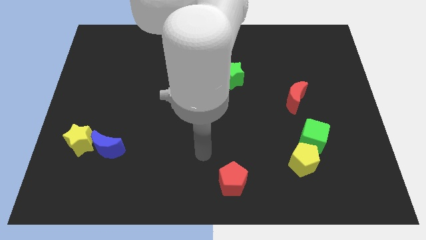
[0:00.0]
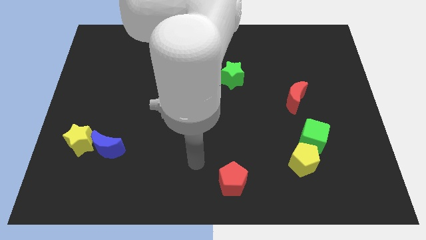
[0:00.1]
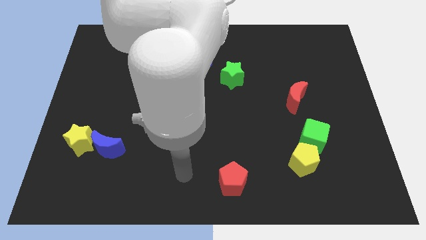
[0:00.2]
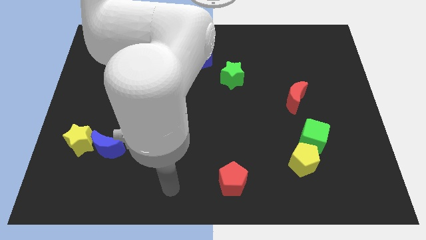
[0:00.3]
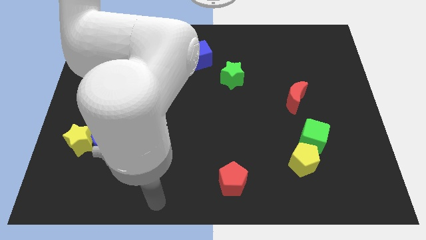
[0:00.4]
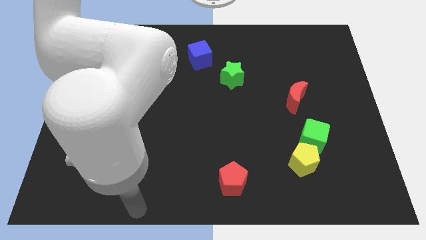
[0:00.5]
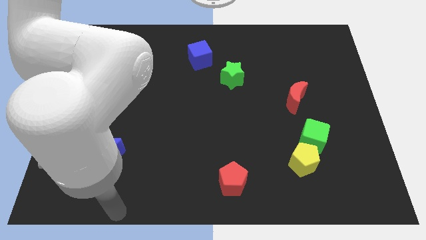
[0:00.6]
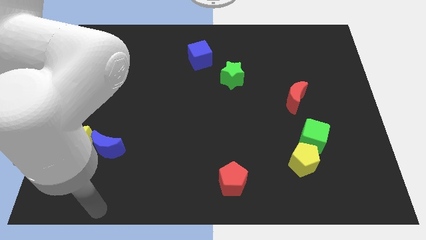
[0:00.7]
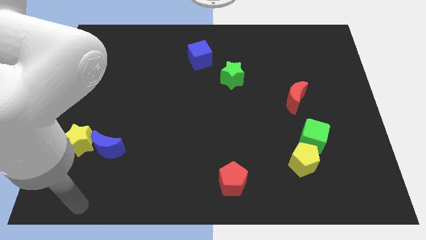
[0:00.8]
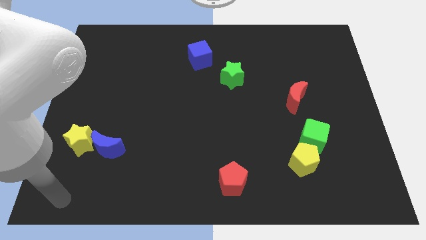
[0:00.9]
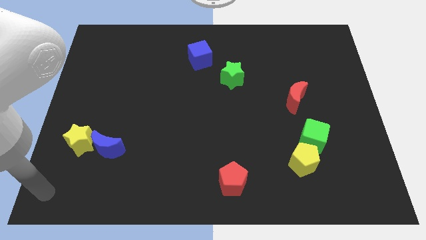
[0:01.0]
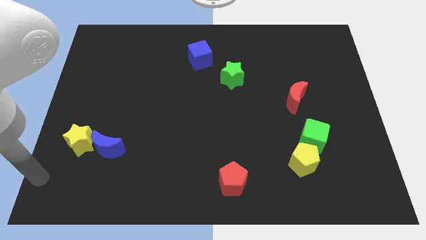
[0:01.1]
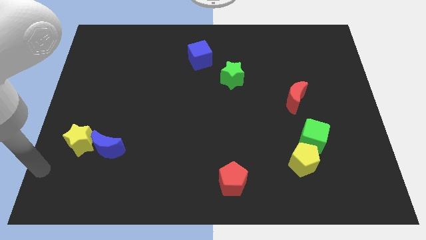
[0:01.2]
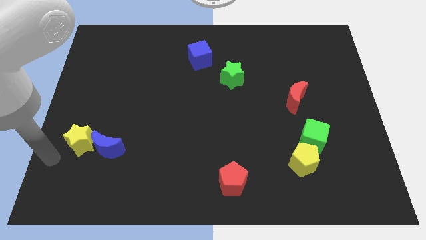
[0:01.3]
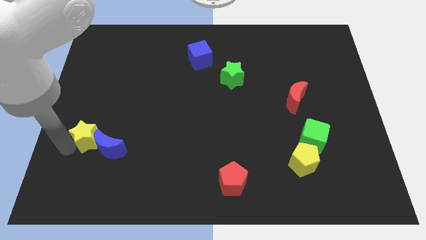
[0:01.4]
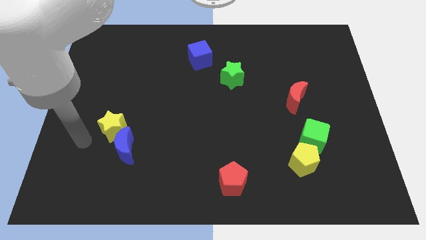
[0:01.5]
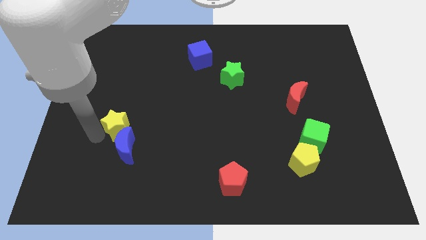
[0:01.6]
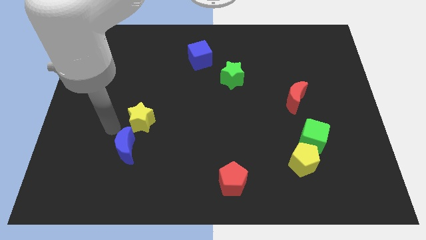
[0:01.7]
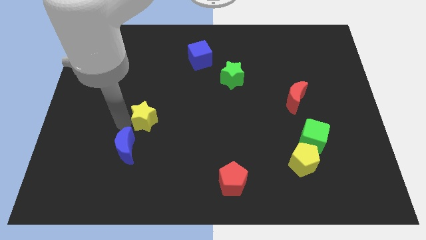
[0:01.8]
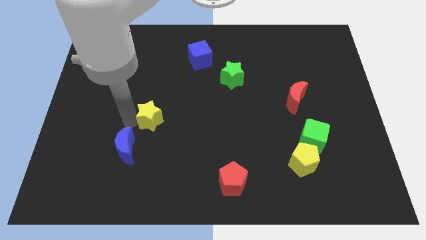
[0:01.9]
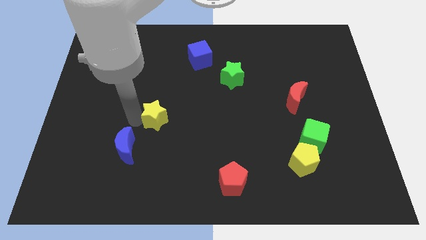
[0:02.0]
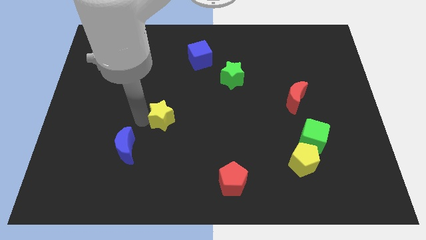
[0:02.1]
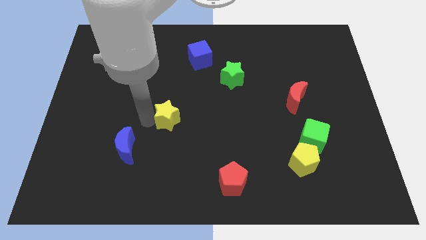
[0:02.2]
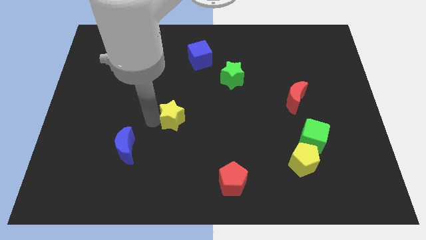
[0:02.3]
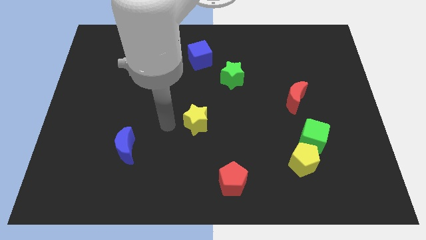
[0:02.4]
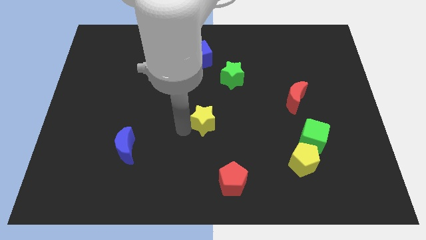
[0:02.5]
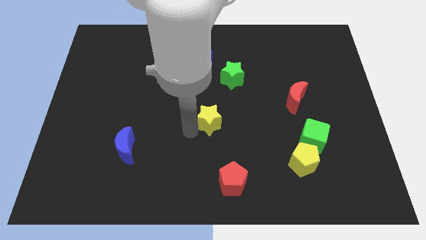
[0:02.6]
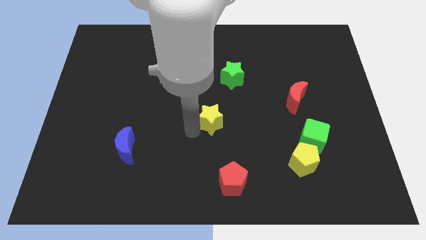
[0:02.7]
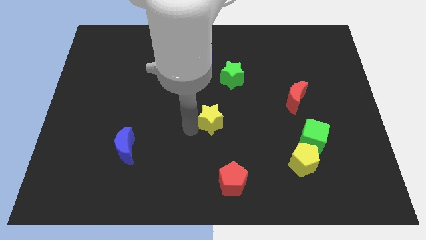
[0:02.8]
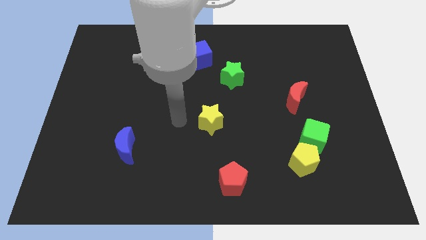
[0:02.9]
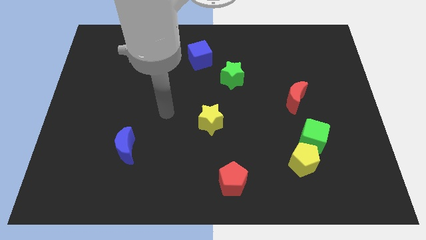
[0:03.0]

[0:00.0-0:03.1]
separate yellow star from blue moon

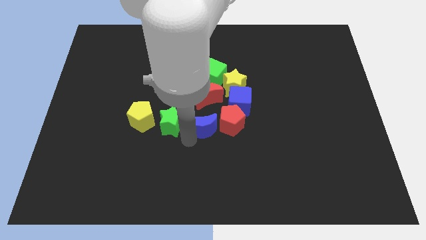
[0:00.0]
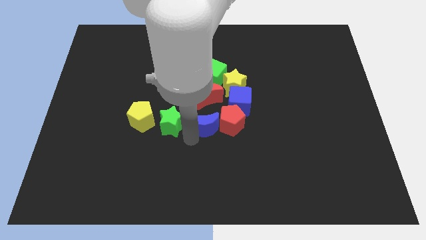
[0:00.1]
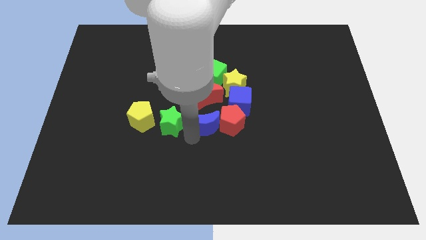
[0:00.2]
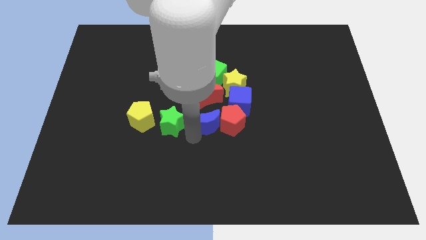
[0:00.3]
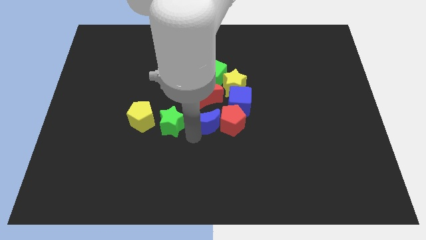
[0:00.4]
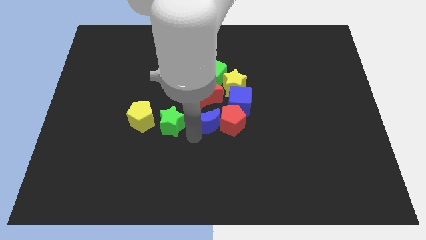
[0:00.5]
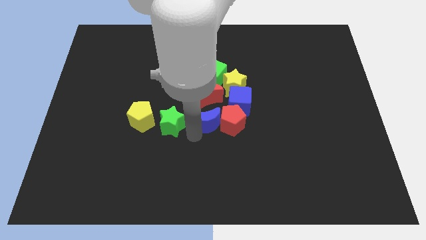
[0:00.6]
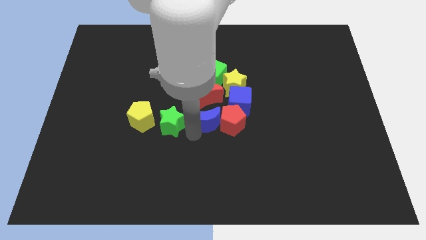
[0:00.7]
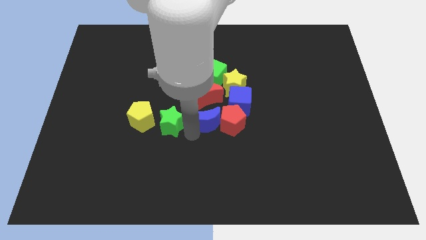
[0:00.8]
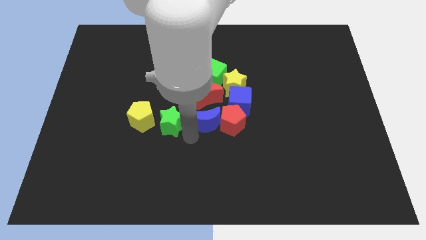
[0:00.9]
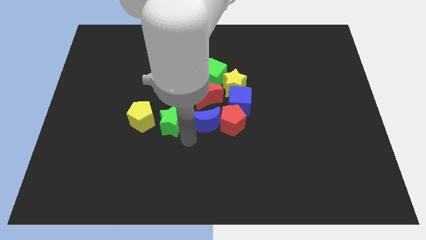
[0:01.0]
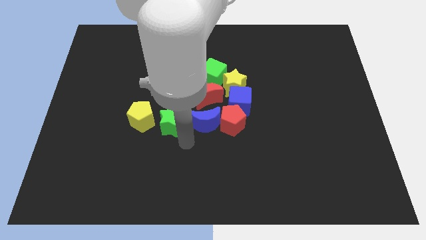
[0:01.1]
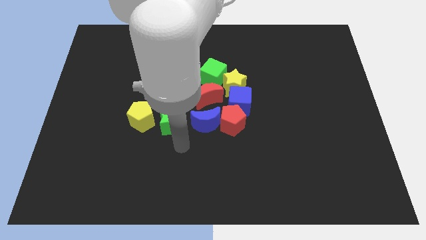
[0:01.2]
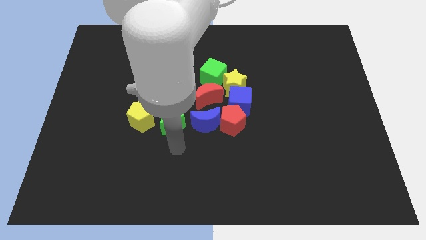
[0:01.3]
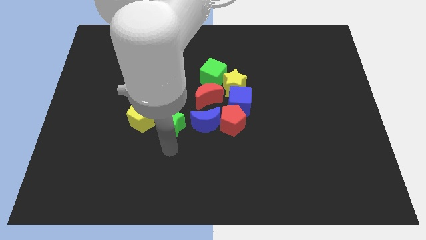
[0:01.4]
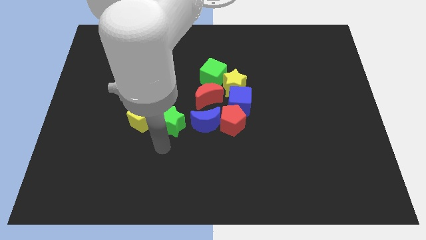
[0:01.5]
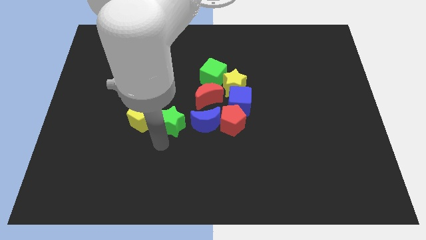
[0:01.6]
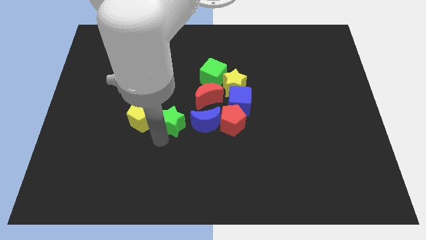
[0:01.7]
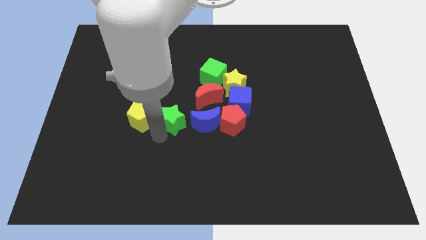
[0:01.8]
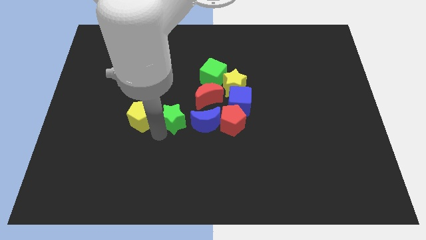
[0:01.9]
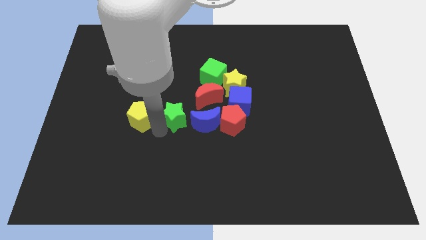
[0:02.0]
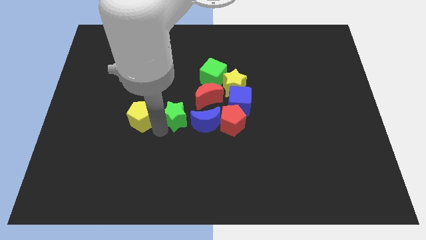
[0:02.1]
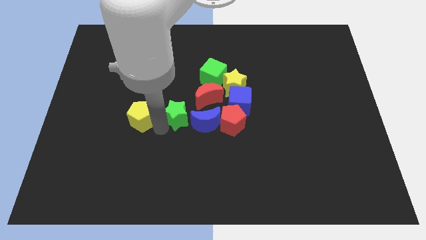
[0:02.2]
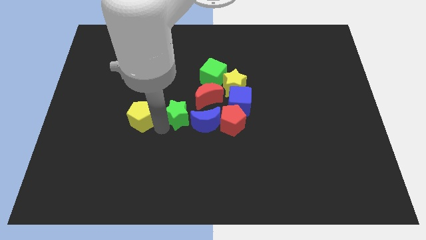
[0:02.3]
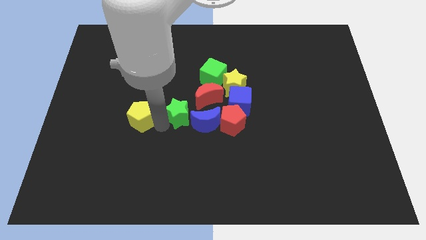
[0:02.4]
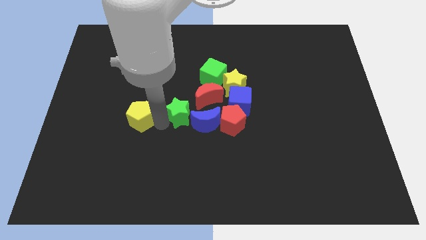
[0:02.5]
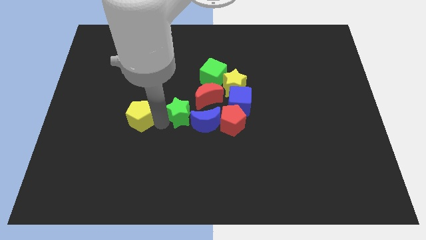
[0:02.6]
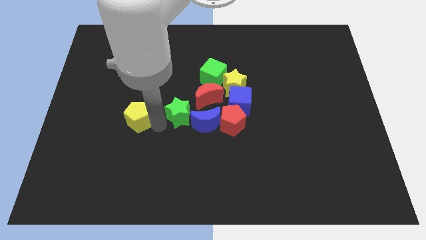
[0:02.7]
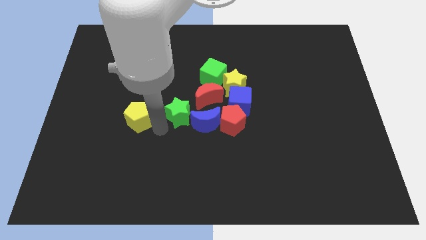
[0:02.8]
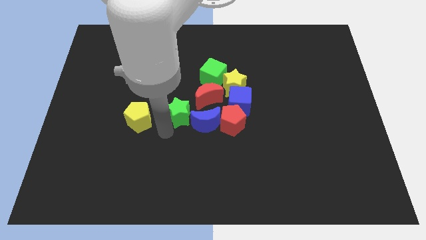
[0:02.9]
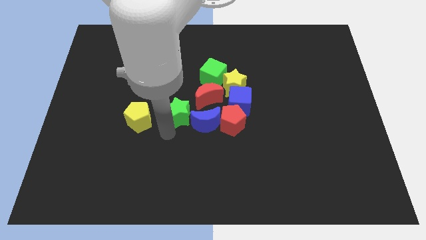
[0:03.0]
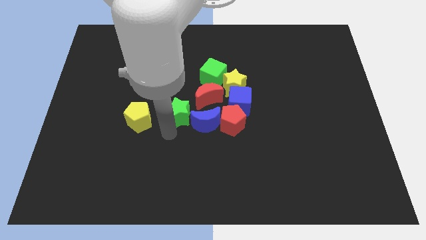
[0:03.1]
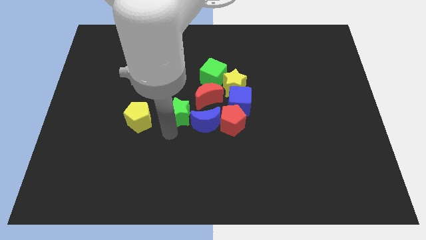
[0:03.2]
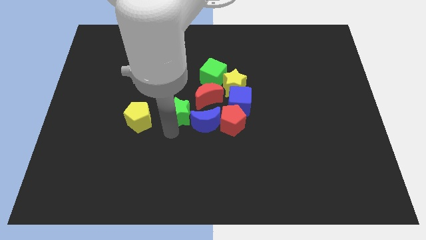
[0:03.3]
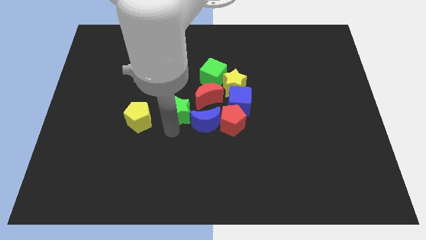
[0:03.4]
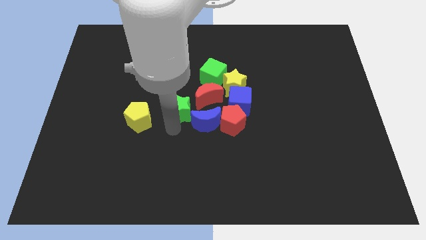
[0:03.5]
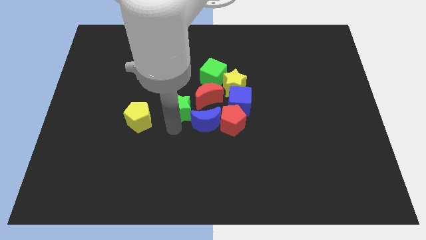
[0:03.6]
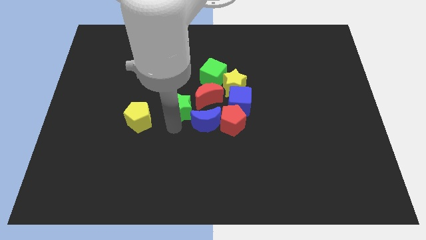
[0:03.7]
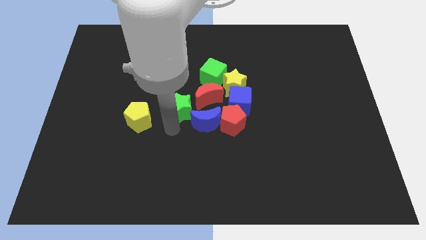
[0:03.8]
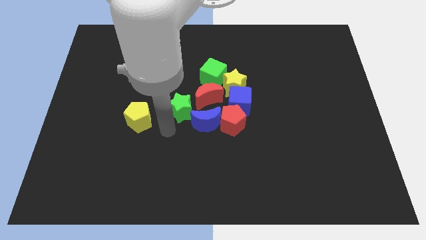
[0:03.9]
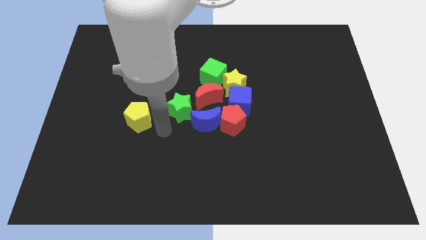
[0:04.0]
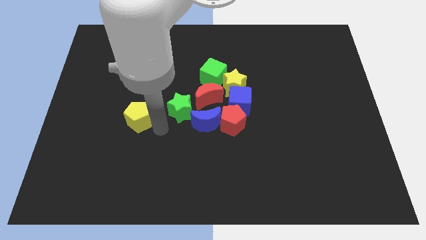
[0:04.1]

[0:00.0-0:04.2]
slide the green star between the red moon and yellow pentagon

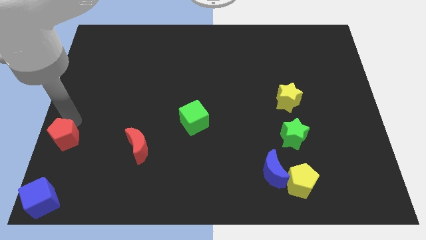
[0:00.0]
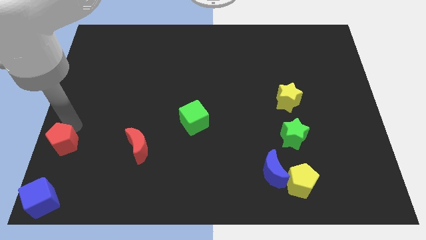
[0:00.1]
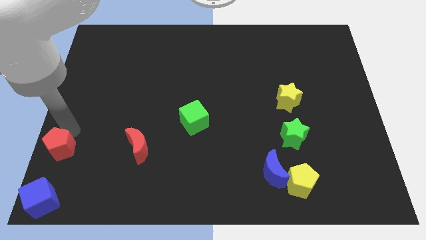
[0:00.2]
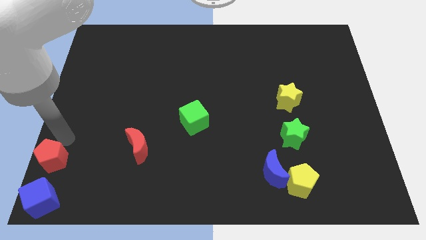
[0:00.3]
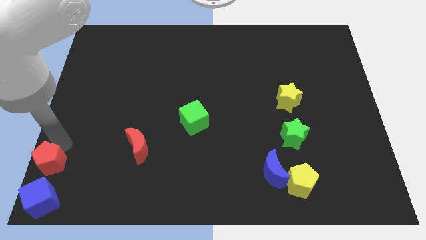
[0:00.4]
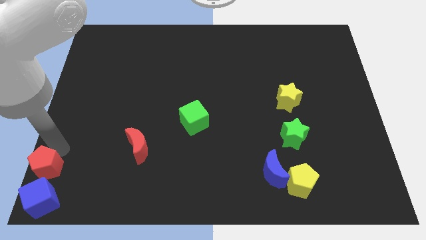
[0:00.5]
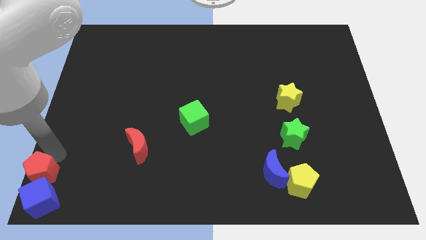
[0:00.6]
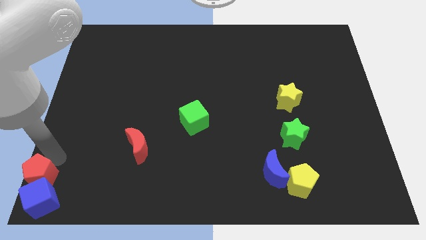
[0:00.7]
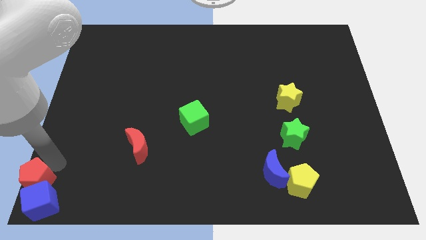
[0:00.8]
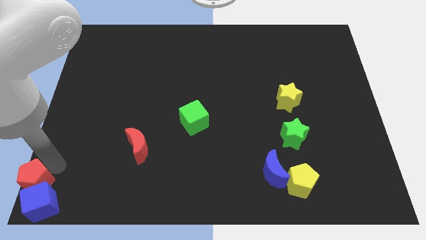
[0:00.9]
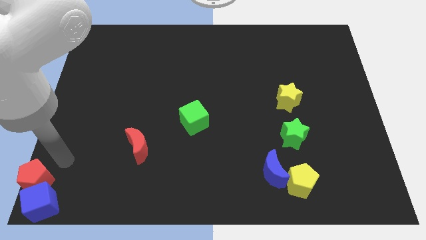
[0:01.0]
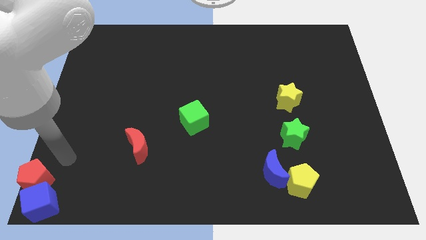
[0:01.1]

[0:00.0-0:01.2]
move the red pentagon into the blue cube

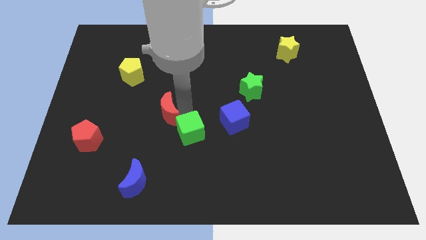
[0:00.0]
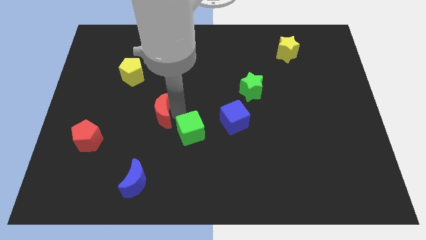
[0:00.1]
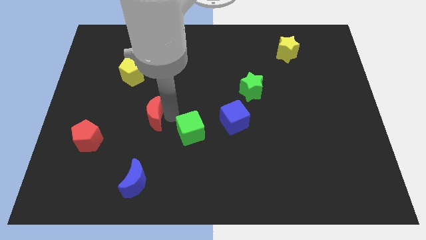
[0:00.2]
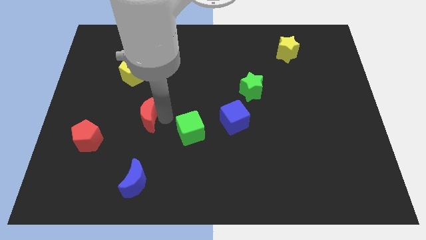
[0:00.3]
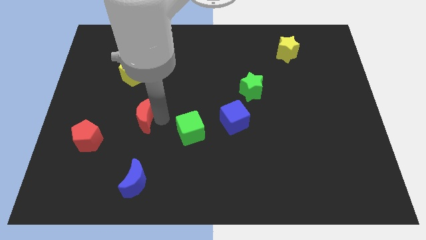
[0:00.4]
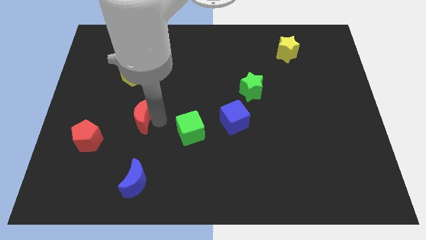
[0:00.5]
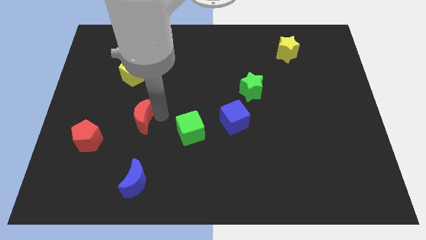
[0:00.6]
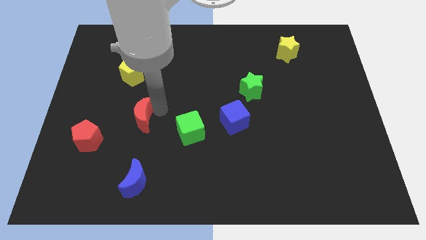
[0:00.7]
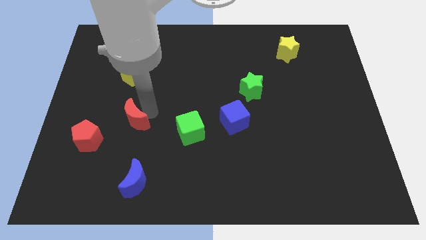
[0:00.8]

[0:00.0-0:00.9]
separate the red crescent and the green cube
